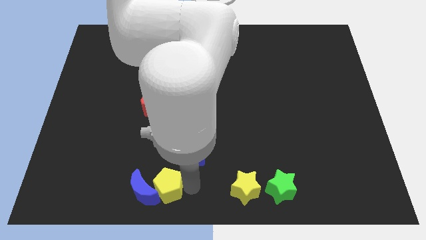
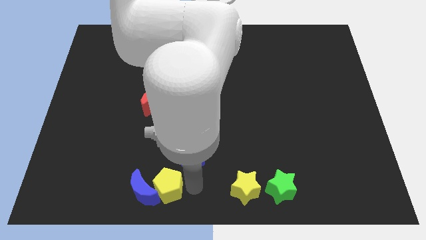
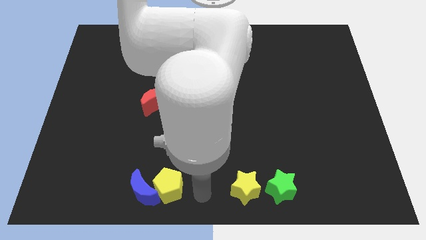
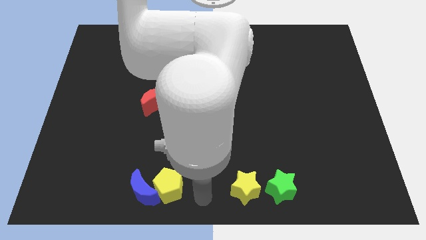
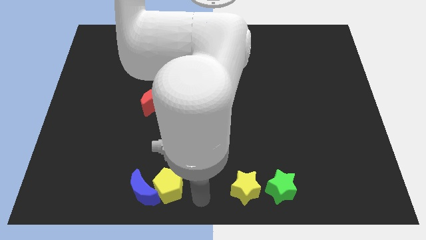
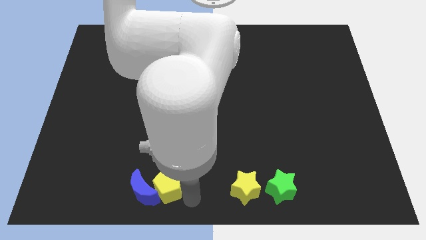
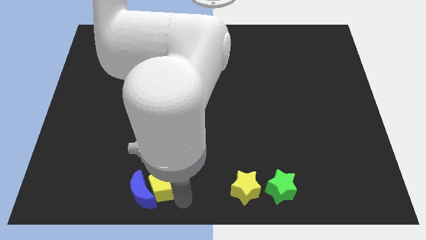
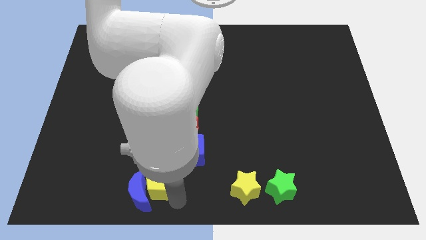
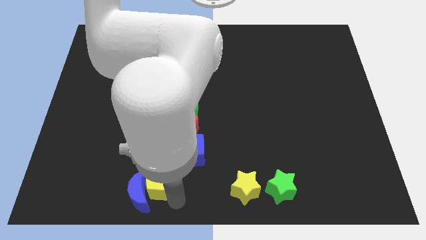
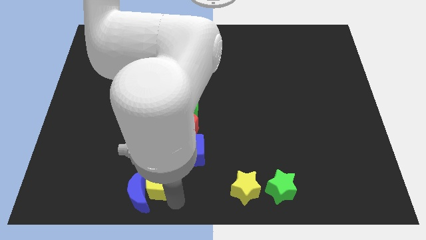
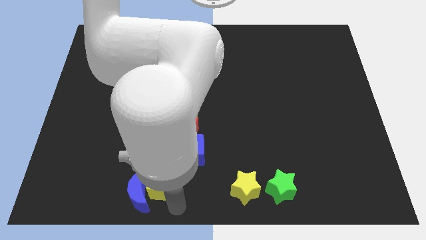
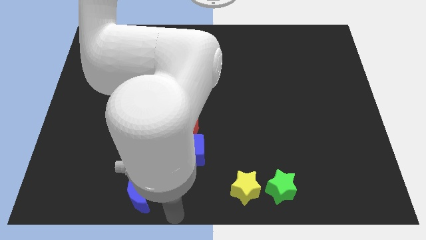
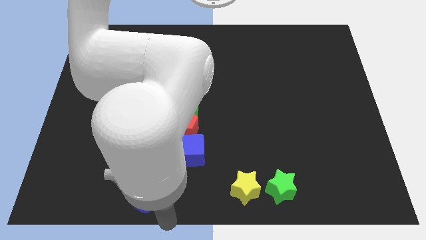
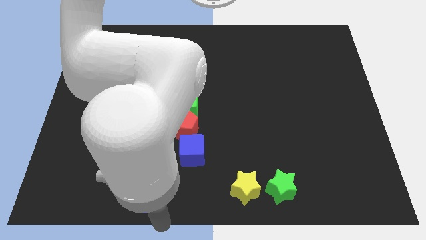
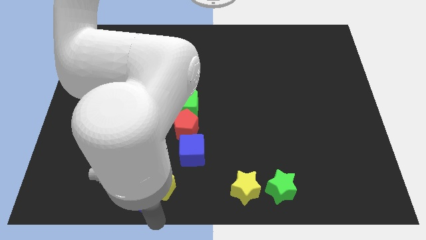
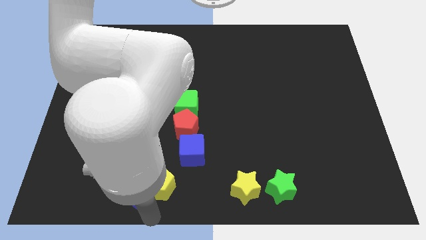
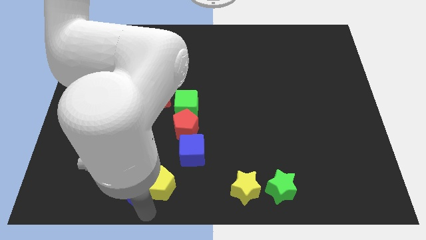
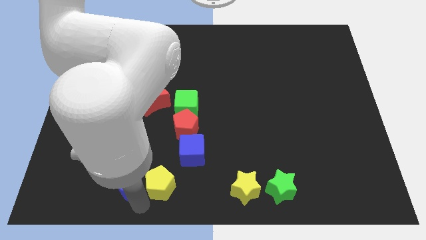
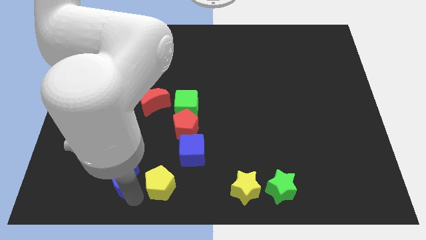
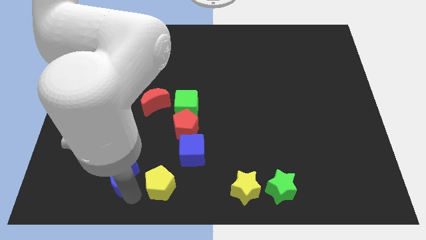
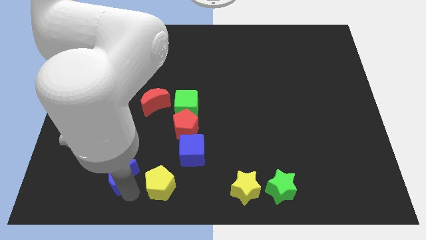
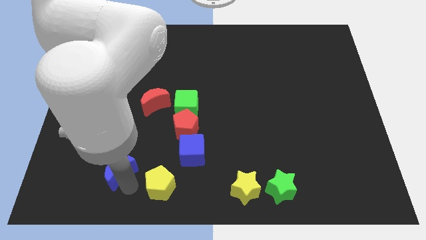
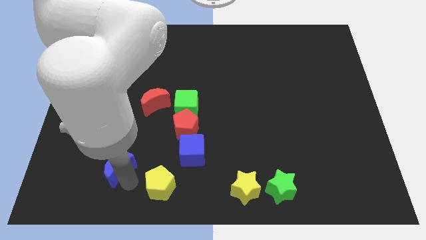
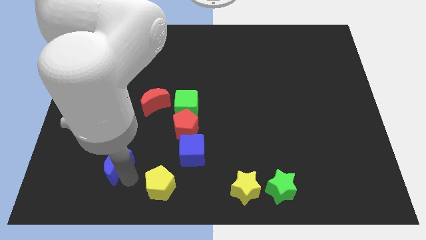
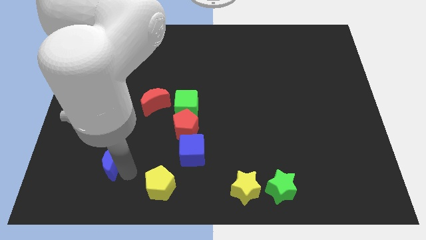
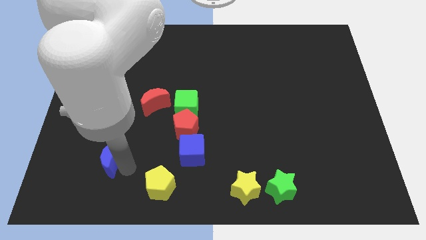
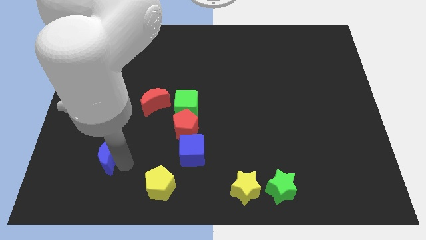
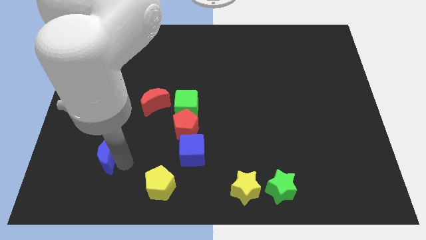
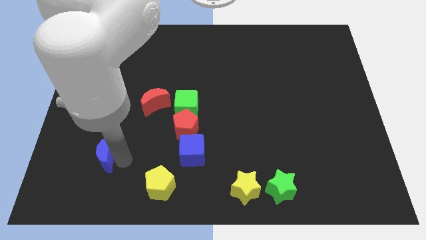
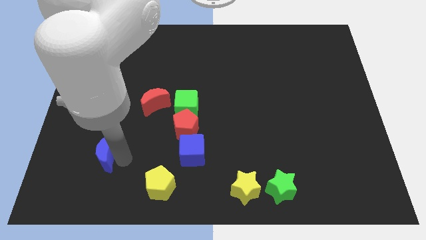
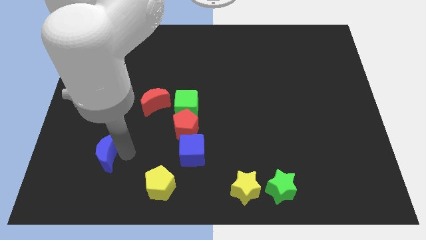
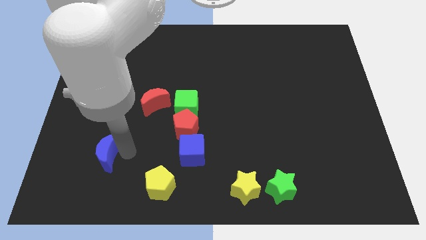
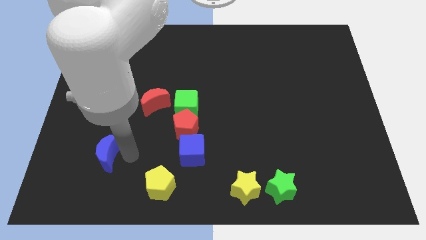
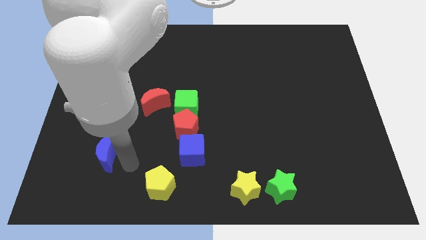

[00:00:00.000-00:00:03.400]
move blue crescent beside left side of the blue cube

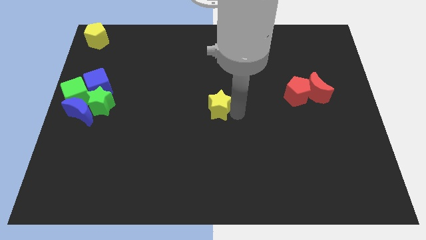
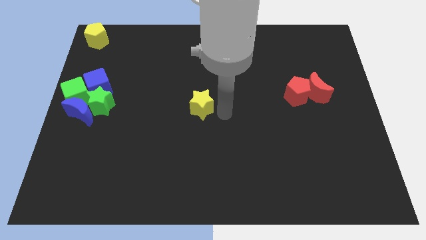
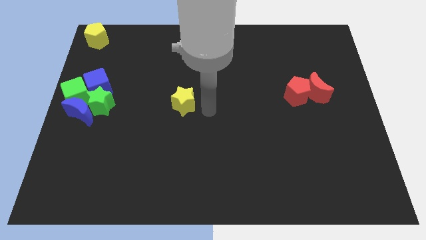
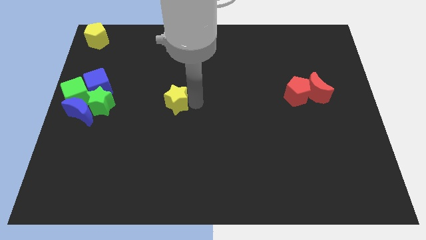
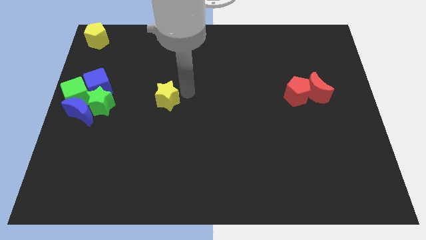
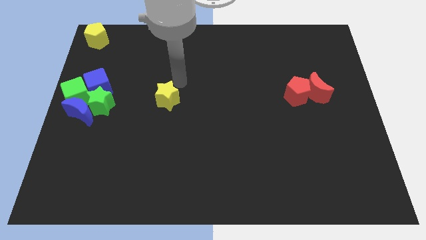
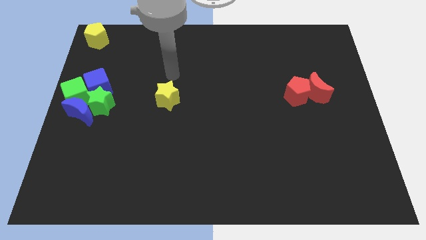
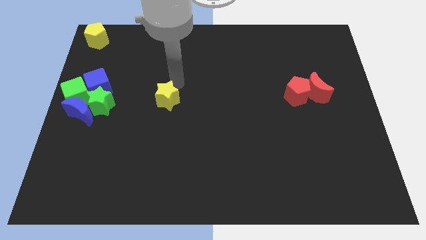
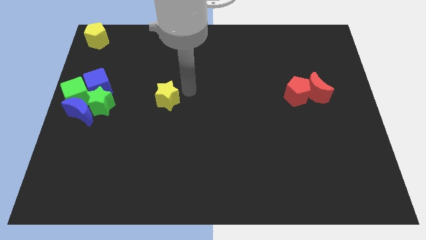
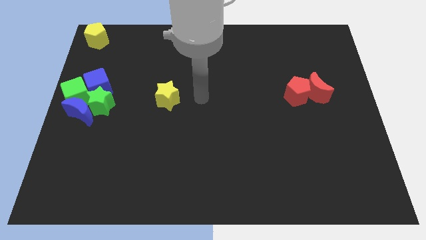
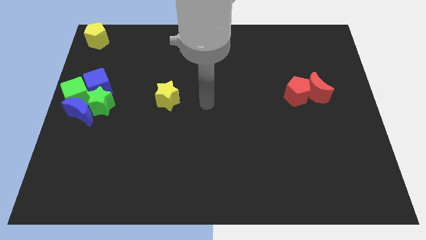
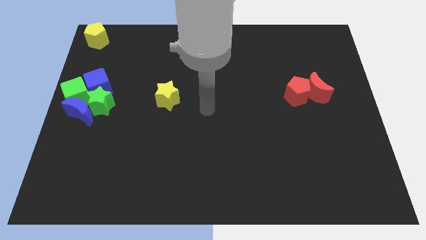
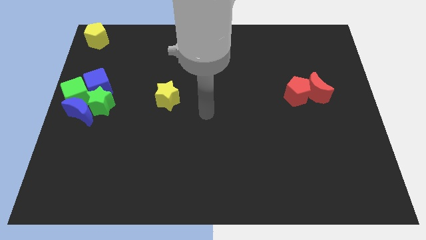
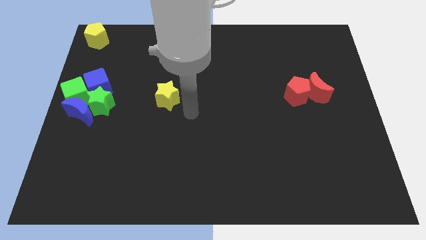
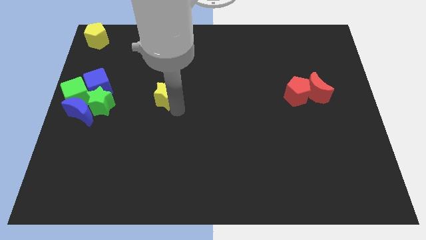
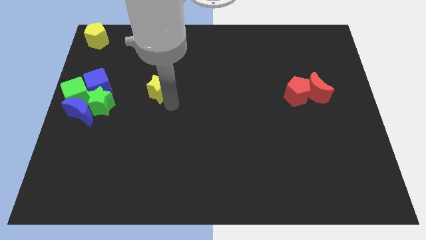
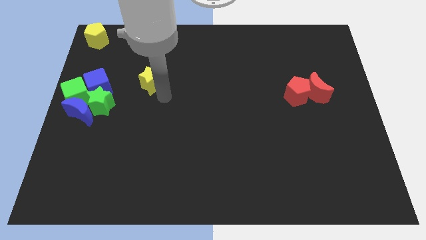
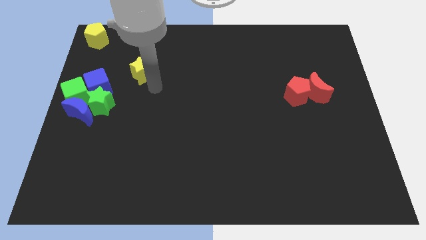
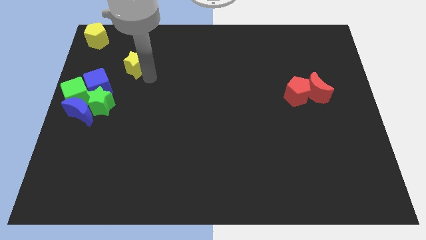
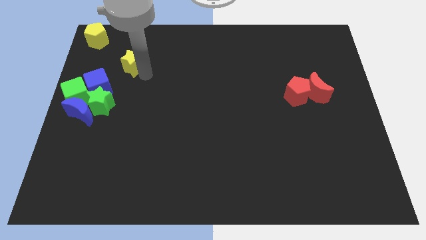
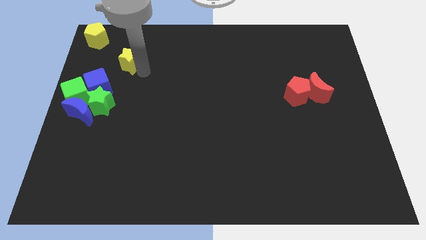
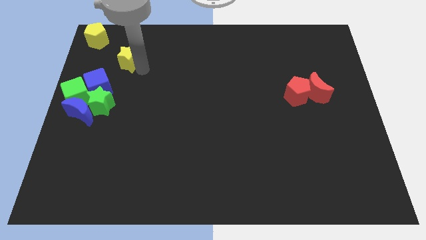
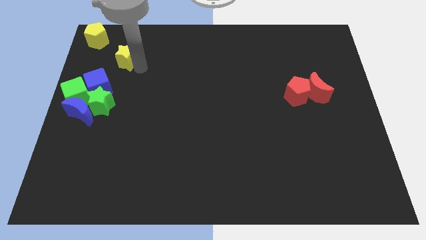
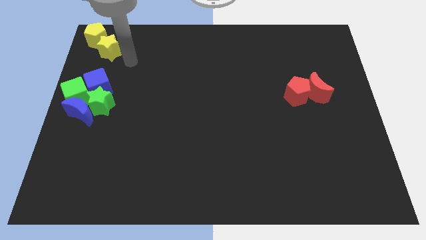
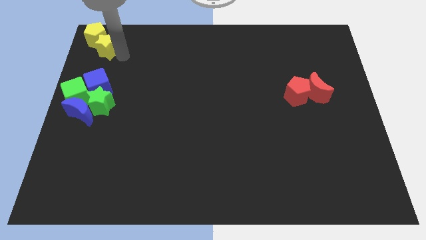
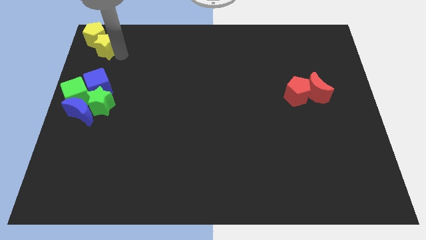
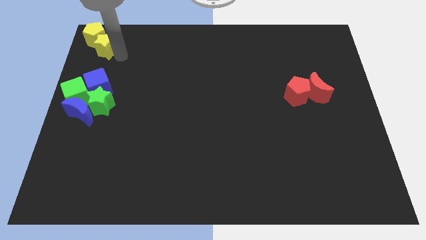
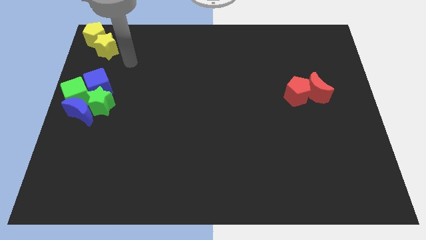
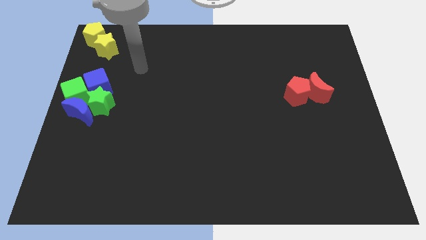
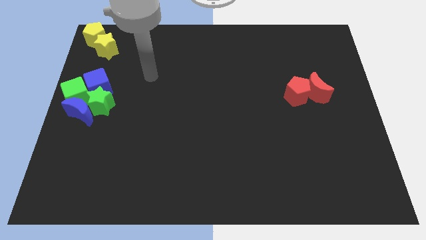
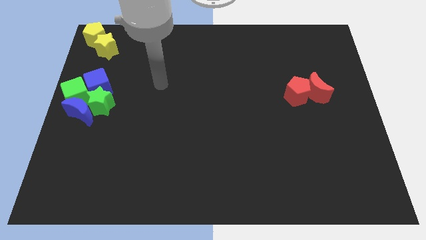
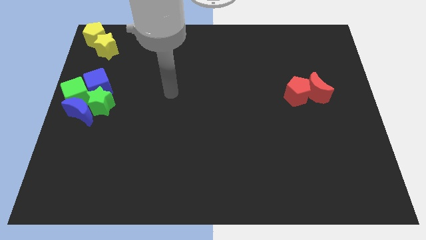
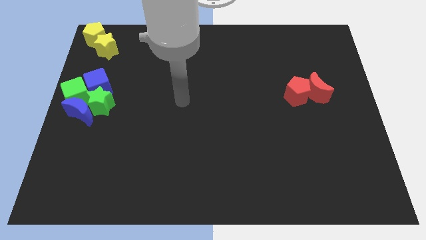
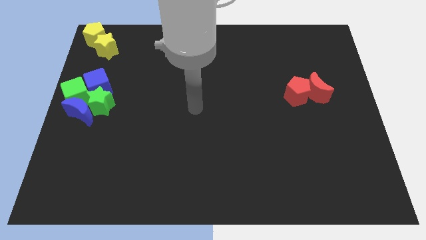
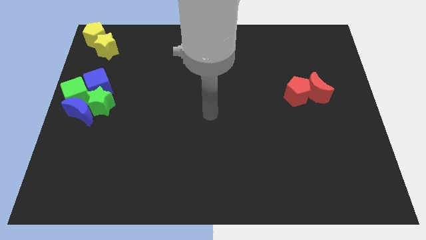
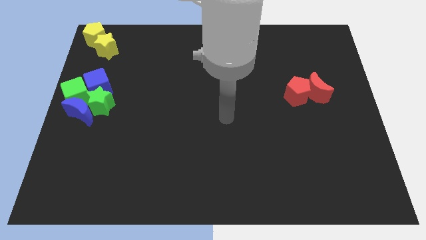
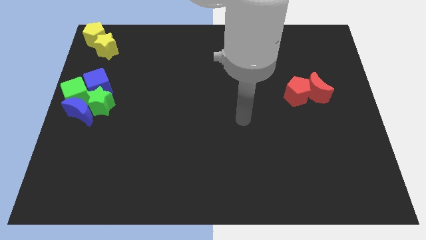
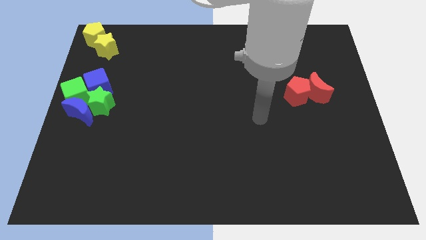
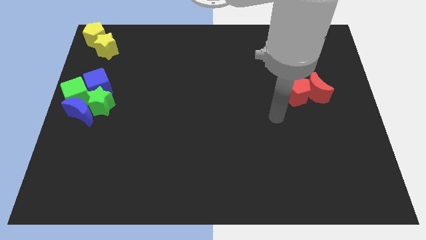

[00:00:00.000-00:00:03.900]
place yellow star close to yellow pentagon

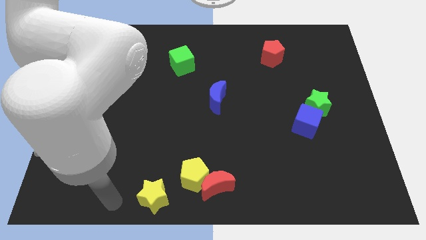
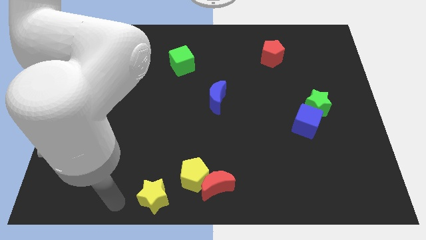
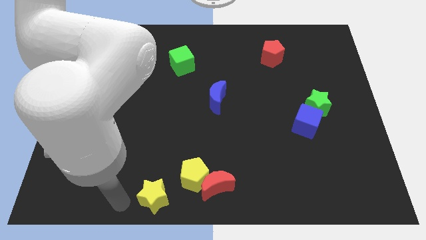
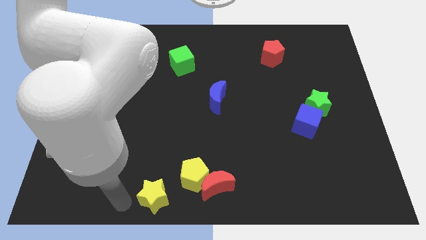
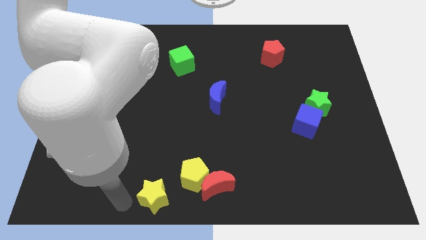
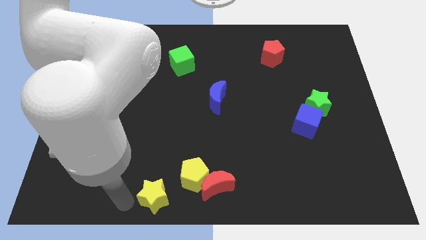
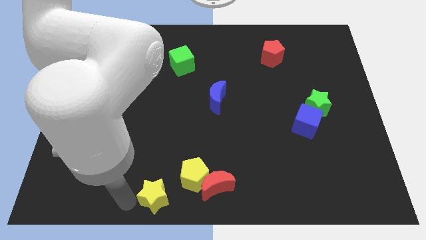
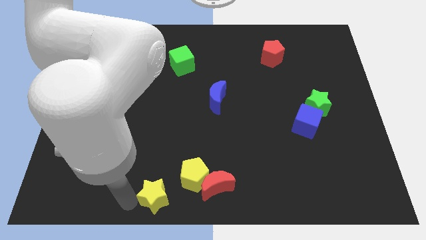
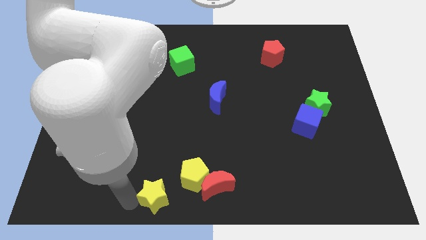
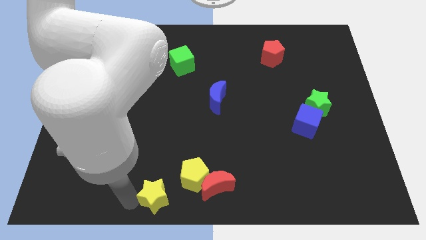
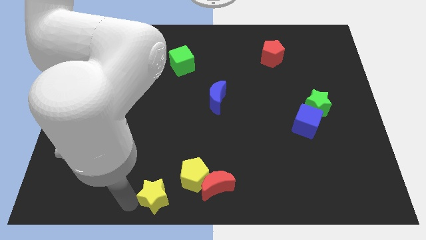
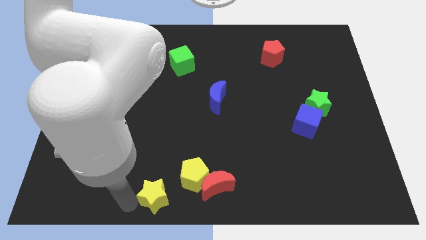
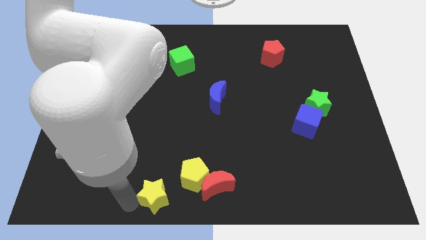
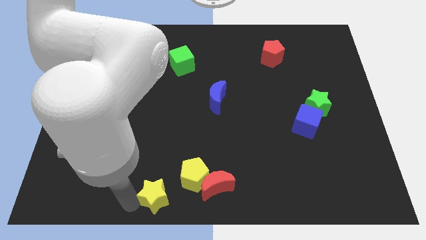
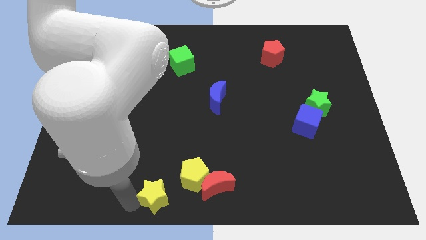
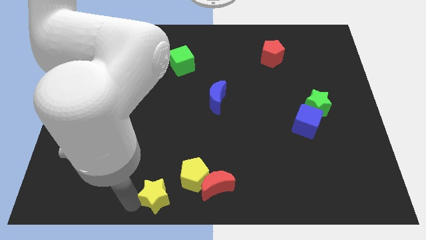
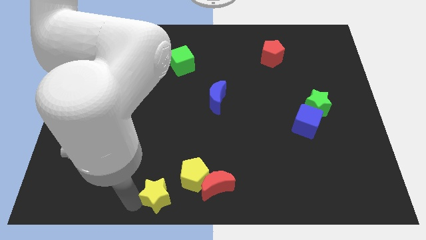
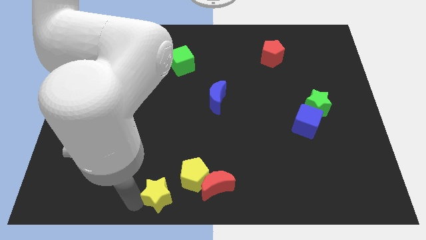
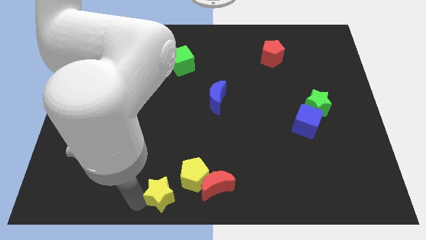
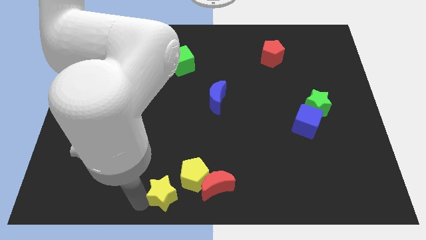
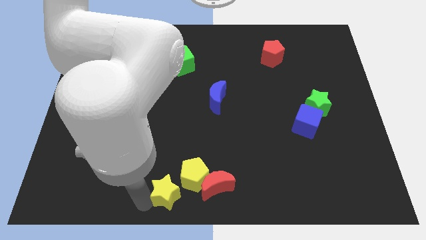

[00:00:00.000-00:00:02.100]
move the yellow star towards the bottom of the yellow pentagon
